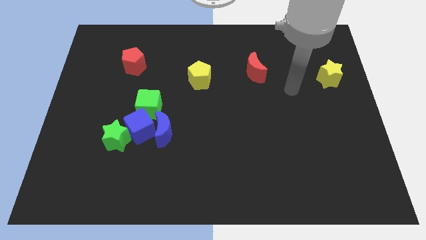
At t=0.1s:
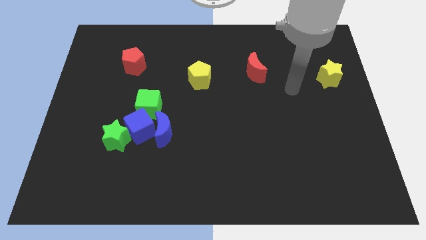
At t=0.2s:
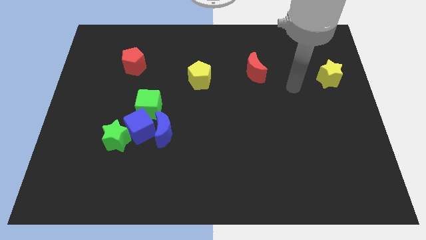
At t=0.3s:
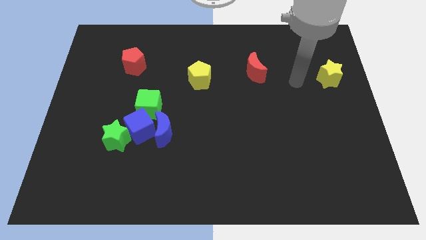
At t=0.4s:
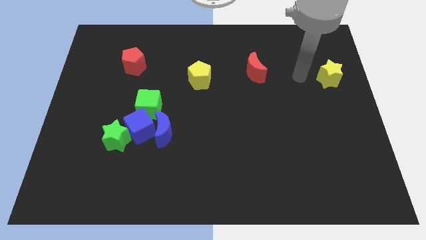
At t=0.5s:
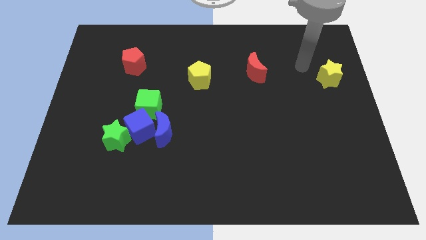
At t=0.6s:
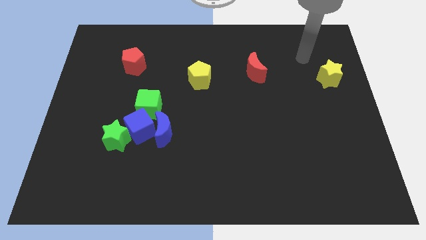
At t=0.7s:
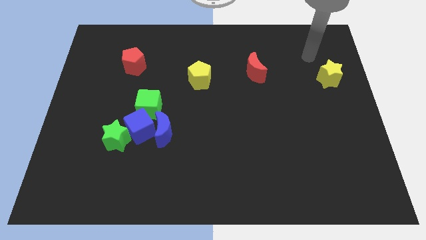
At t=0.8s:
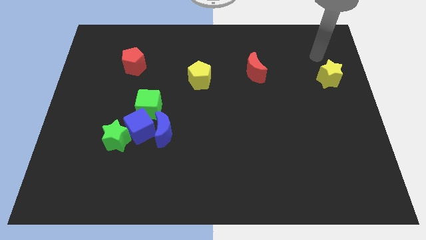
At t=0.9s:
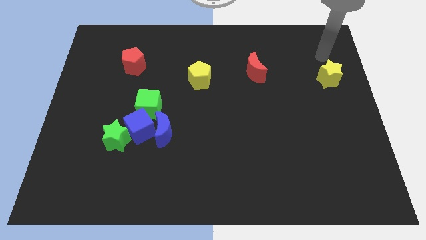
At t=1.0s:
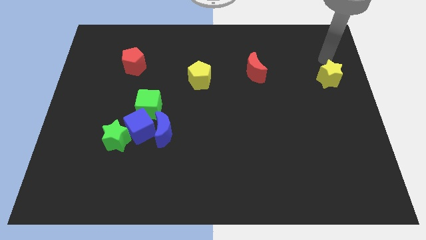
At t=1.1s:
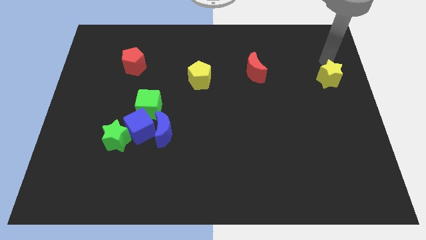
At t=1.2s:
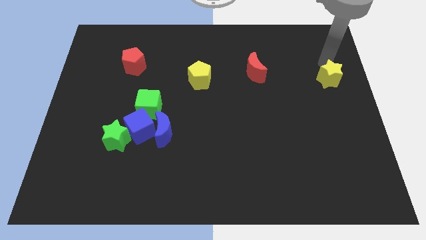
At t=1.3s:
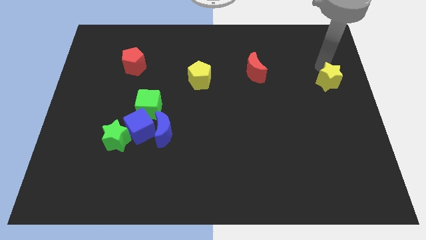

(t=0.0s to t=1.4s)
move your arm to the top of the yellow star

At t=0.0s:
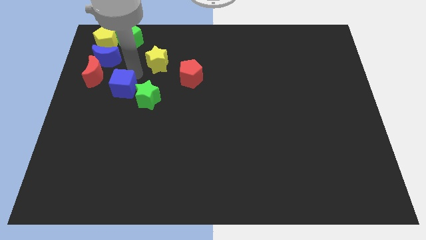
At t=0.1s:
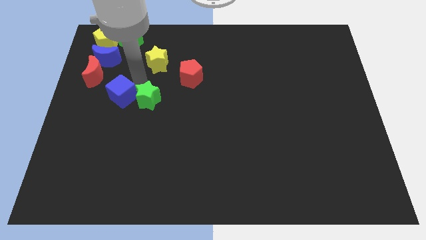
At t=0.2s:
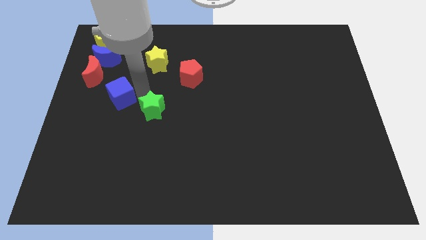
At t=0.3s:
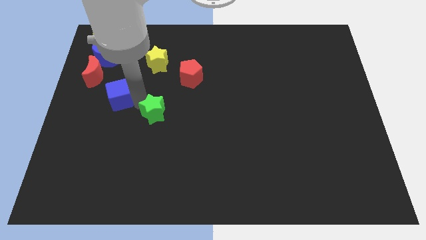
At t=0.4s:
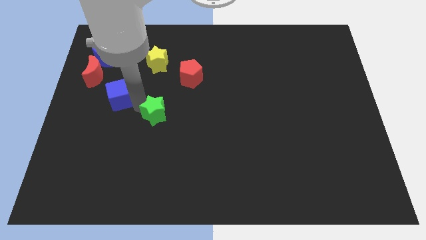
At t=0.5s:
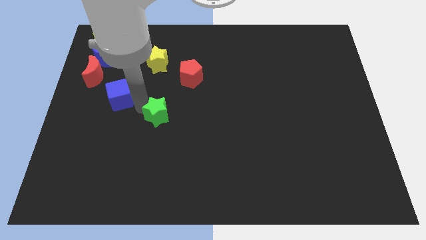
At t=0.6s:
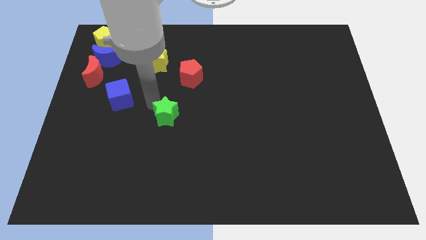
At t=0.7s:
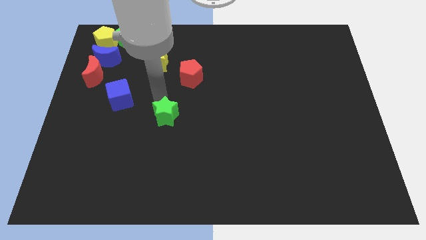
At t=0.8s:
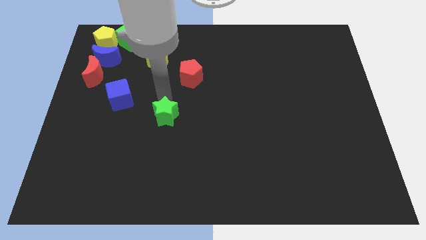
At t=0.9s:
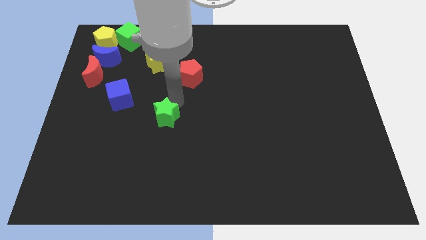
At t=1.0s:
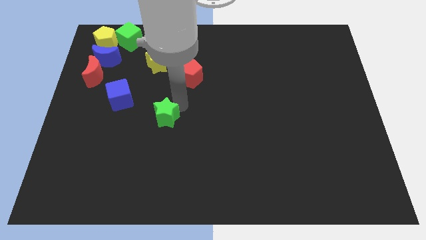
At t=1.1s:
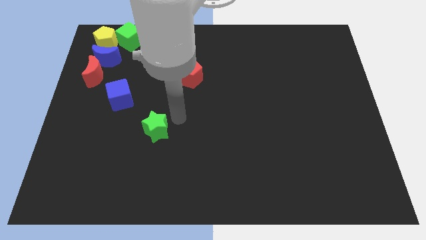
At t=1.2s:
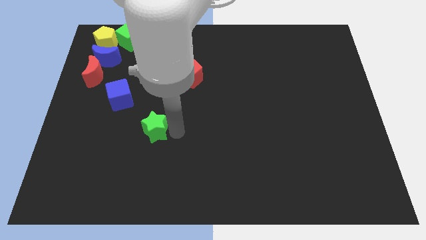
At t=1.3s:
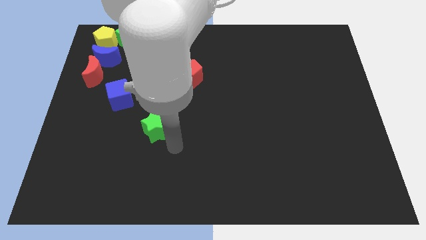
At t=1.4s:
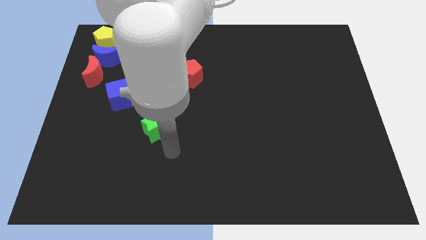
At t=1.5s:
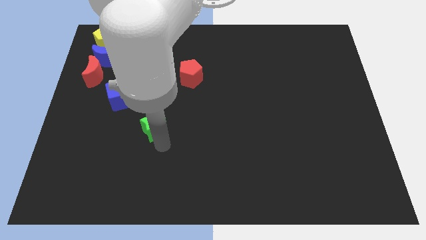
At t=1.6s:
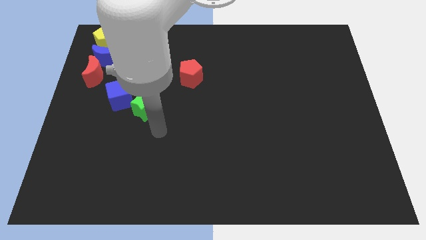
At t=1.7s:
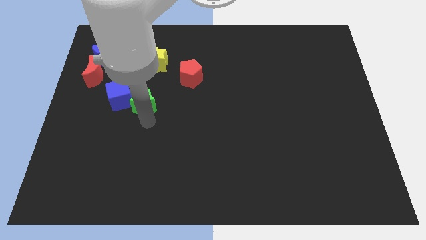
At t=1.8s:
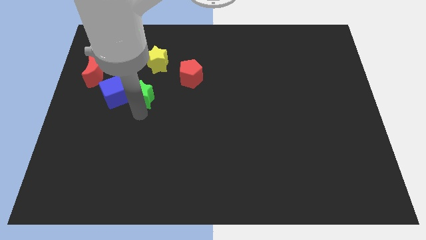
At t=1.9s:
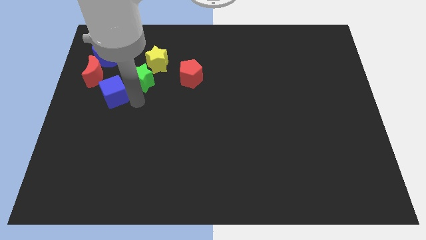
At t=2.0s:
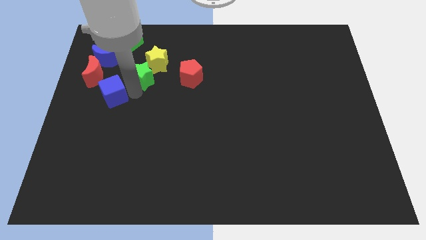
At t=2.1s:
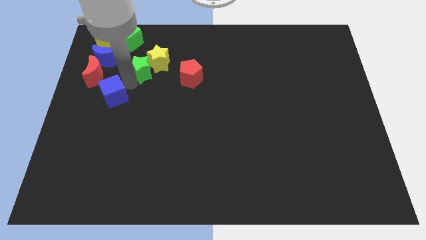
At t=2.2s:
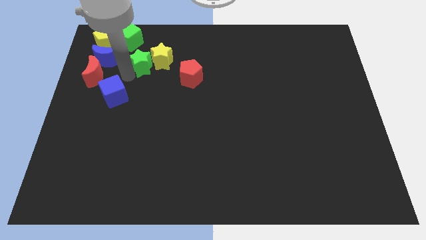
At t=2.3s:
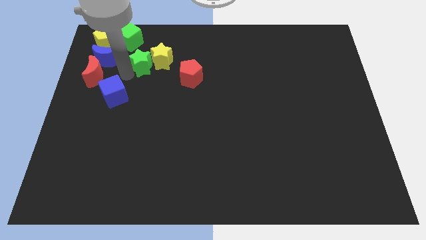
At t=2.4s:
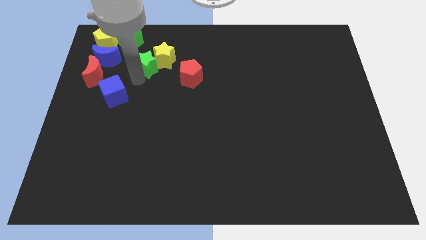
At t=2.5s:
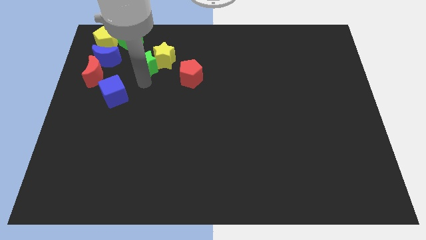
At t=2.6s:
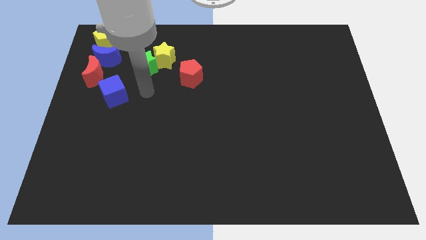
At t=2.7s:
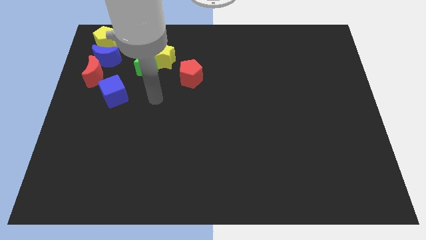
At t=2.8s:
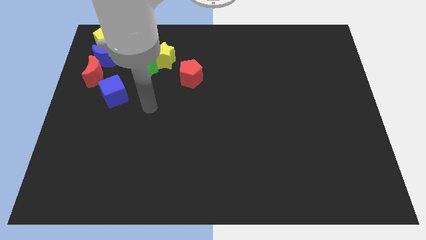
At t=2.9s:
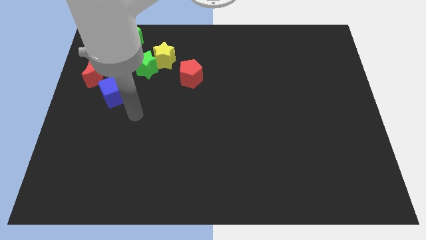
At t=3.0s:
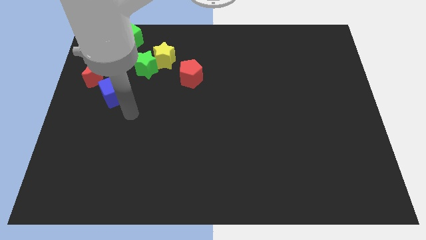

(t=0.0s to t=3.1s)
move the green star to the bottom left of the yellow star

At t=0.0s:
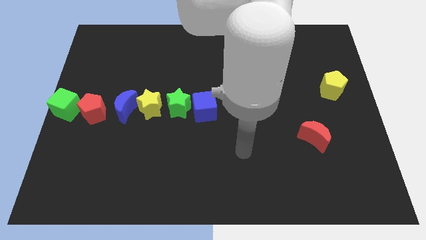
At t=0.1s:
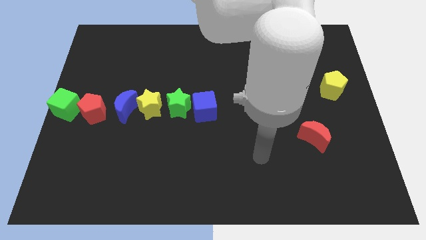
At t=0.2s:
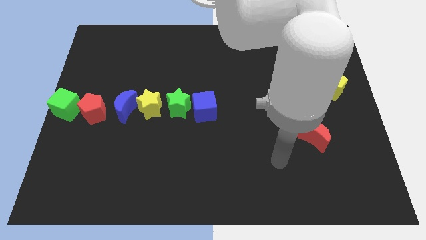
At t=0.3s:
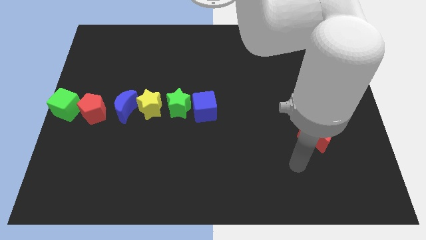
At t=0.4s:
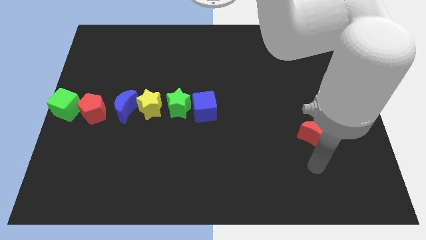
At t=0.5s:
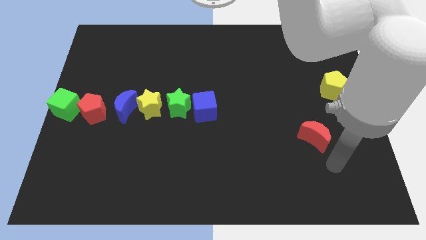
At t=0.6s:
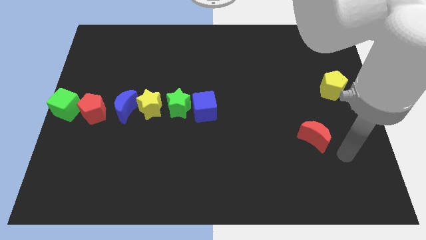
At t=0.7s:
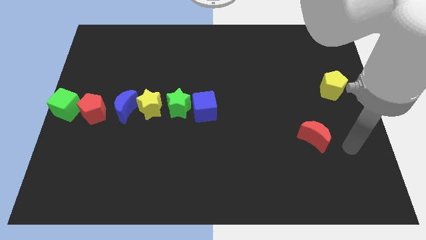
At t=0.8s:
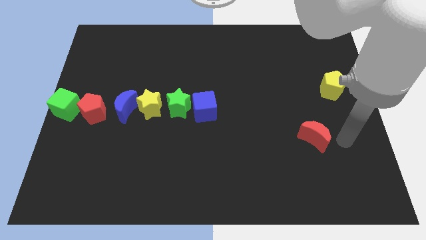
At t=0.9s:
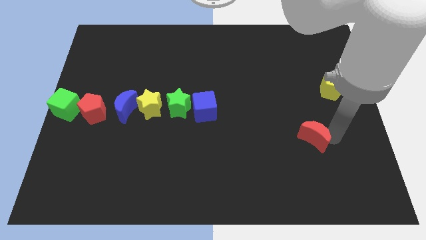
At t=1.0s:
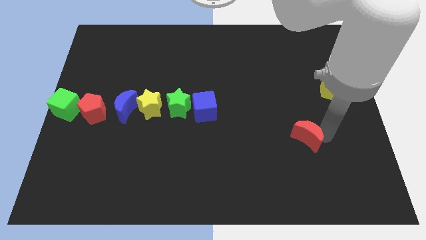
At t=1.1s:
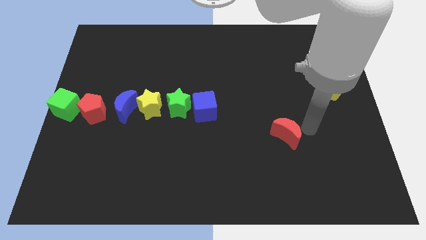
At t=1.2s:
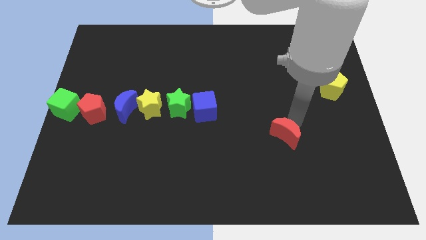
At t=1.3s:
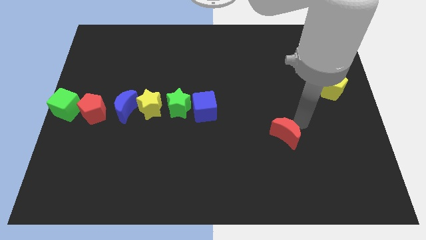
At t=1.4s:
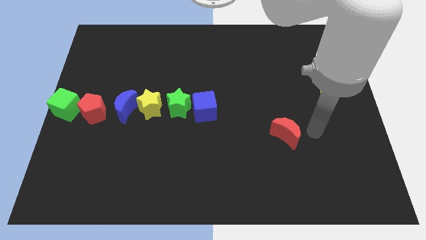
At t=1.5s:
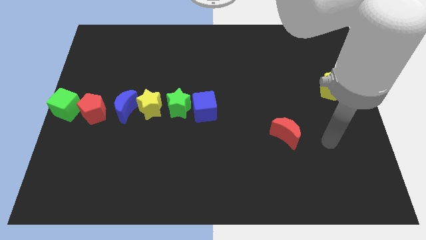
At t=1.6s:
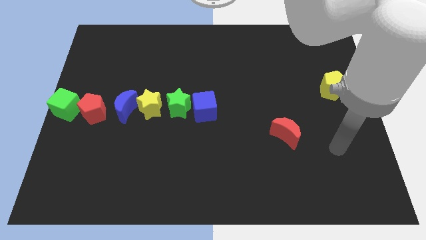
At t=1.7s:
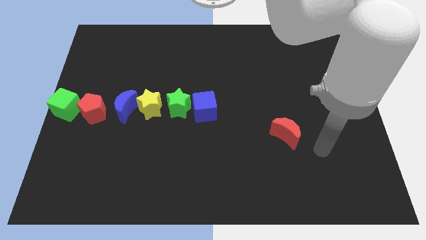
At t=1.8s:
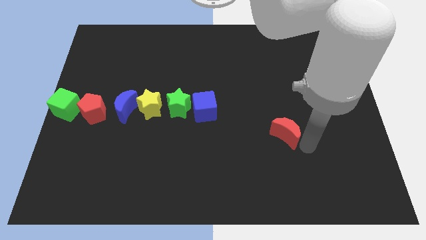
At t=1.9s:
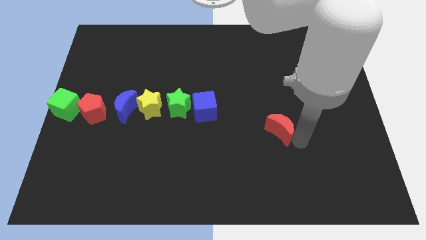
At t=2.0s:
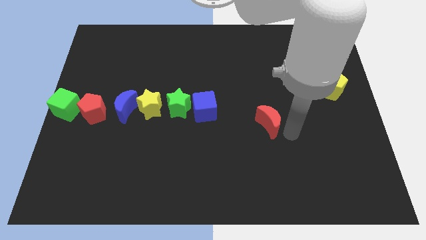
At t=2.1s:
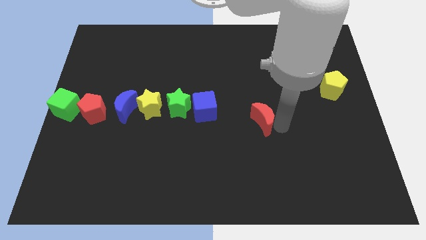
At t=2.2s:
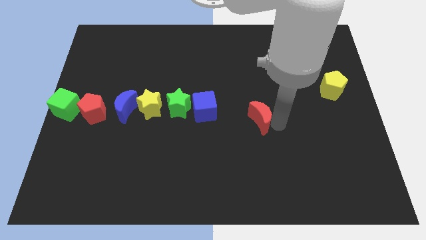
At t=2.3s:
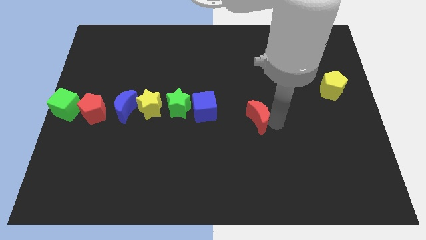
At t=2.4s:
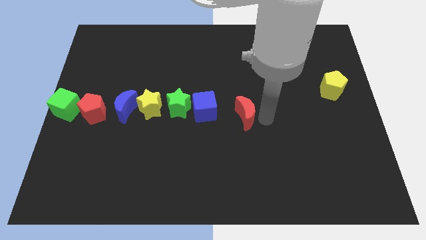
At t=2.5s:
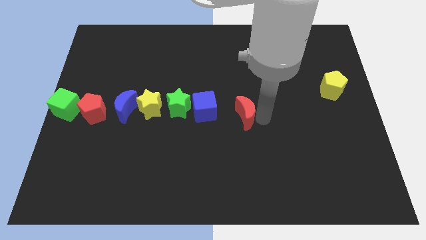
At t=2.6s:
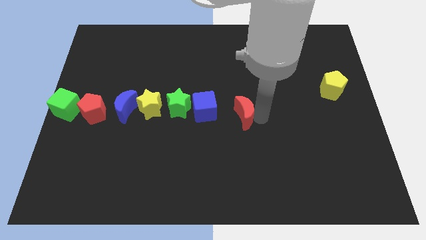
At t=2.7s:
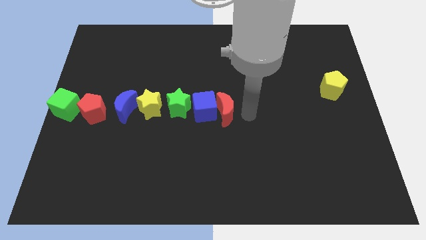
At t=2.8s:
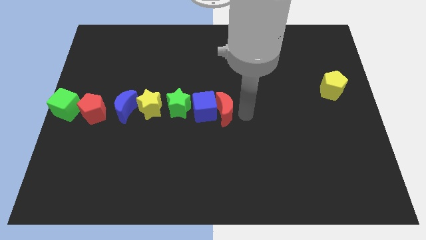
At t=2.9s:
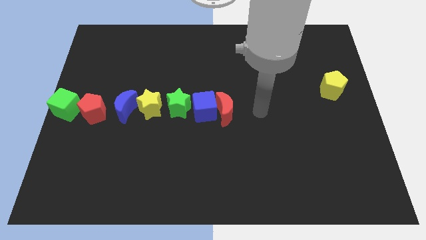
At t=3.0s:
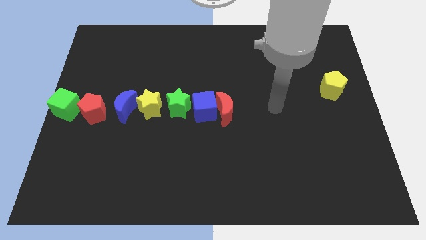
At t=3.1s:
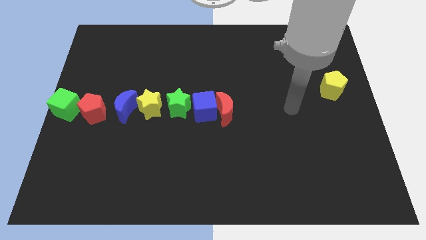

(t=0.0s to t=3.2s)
place the red moon to the right of the blue cube

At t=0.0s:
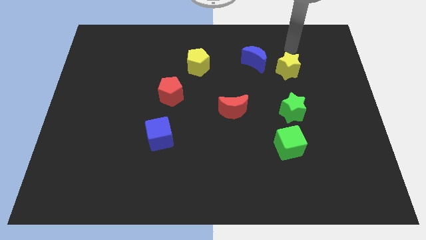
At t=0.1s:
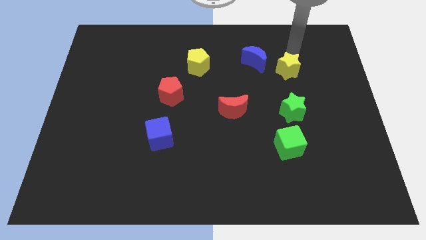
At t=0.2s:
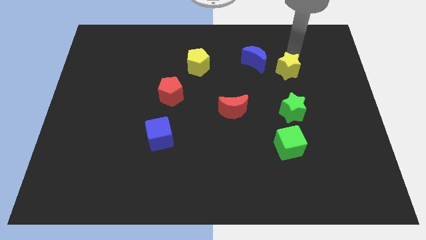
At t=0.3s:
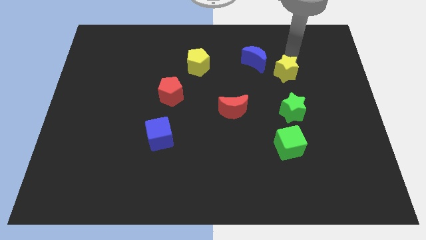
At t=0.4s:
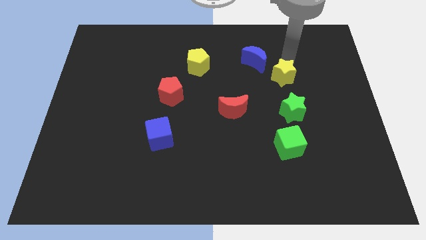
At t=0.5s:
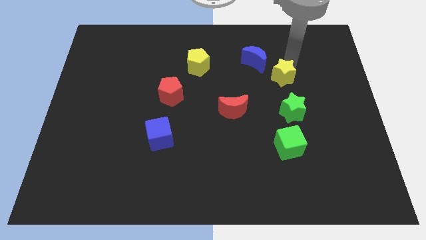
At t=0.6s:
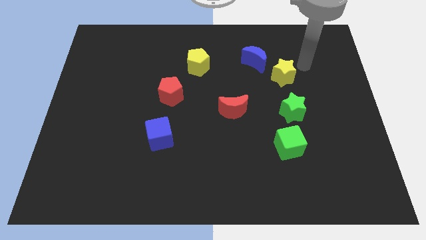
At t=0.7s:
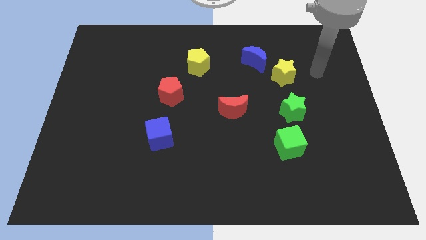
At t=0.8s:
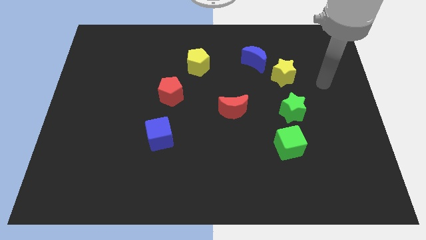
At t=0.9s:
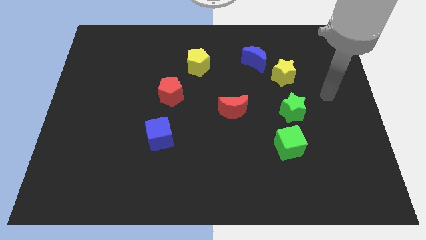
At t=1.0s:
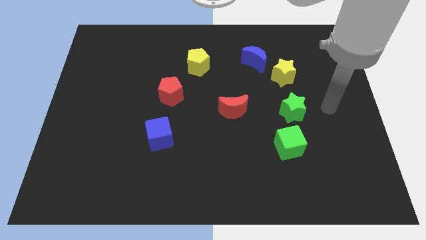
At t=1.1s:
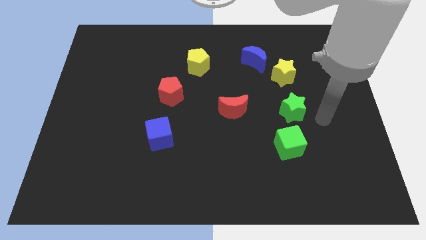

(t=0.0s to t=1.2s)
push yellow star towards the green star

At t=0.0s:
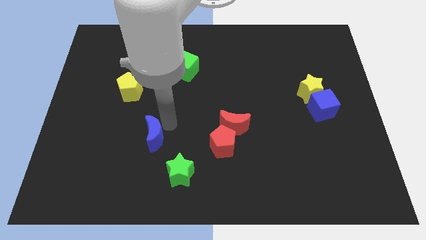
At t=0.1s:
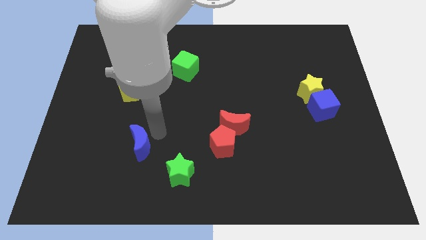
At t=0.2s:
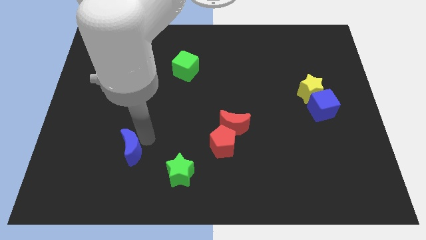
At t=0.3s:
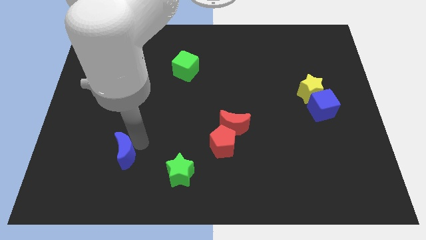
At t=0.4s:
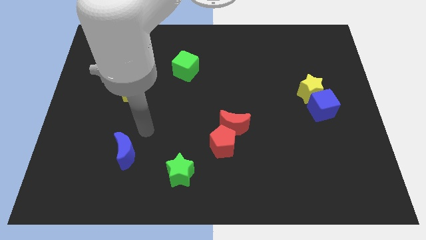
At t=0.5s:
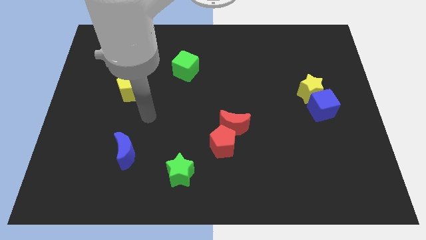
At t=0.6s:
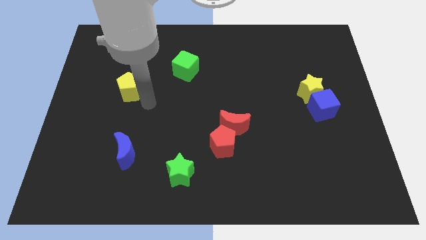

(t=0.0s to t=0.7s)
move the blue crescent towards the bottom left corner of the board
